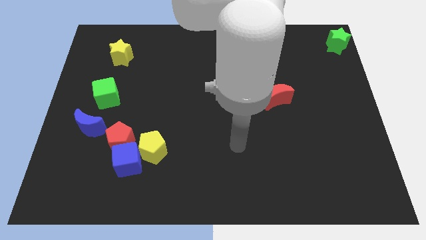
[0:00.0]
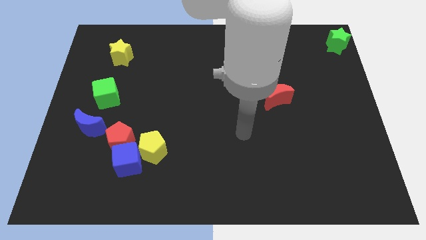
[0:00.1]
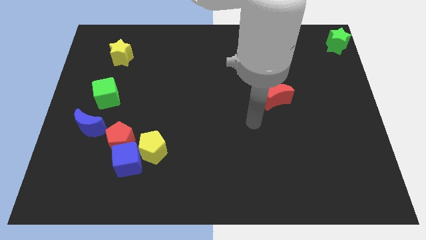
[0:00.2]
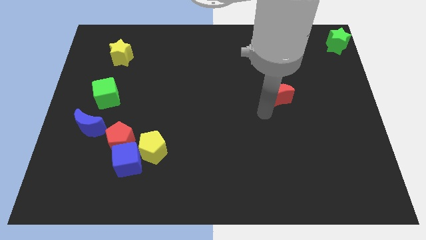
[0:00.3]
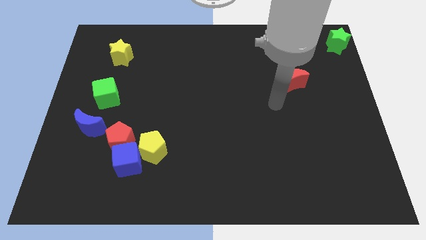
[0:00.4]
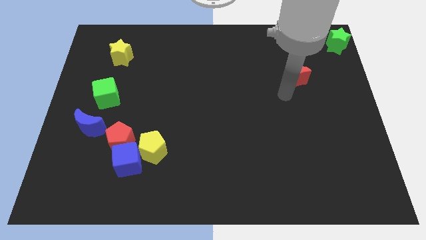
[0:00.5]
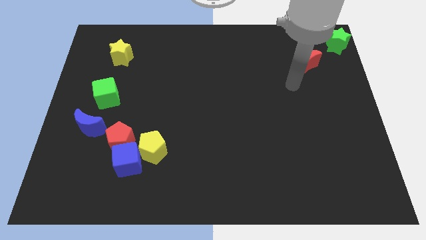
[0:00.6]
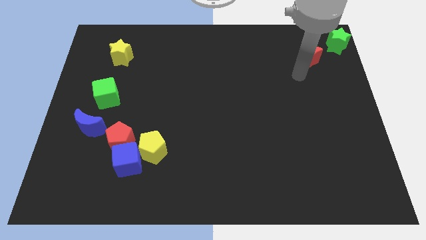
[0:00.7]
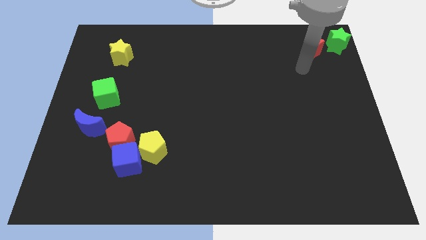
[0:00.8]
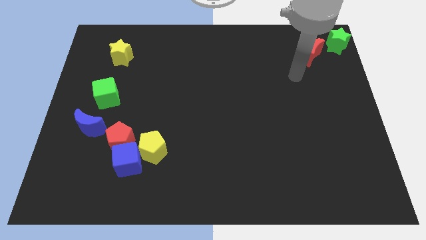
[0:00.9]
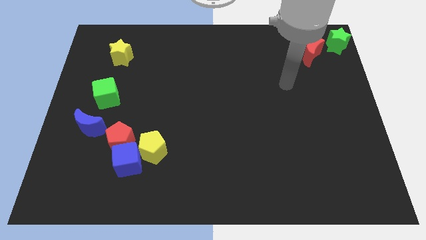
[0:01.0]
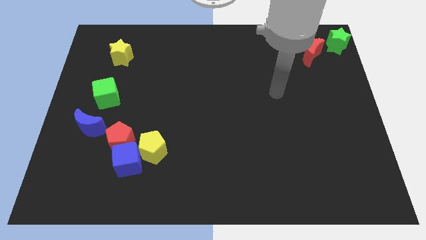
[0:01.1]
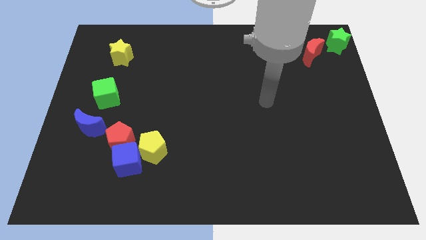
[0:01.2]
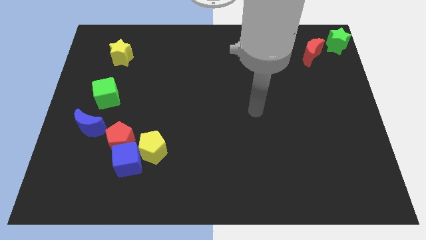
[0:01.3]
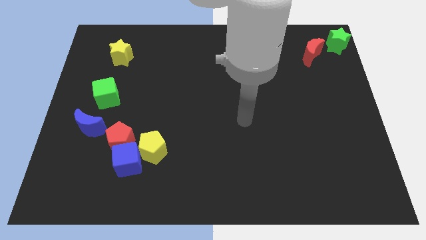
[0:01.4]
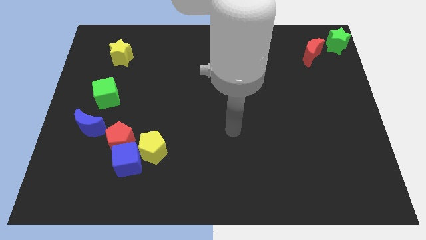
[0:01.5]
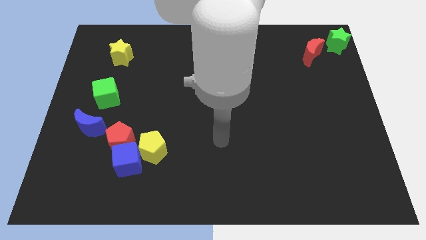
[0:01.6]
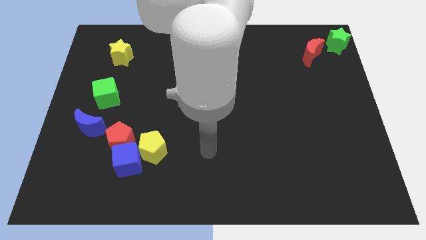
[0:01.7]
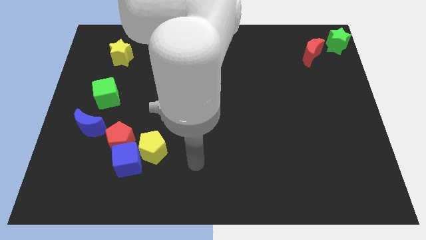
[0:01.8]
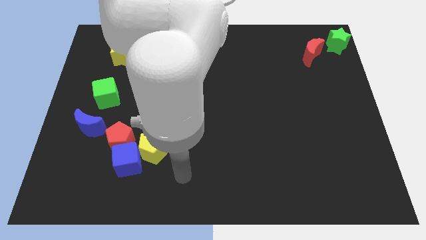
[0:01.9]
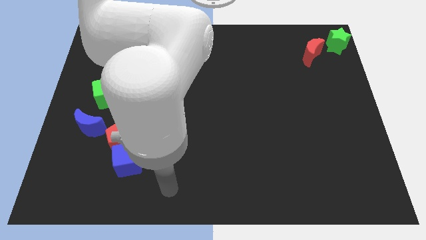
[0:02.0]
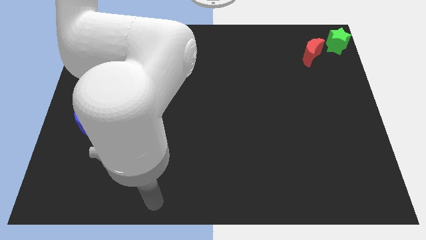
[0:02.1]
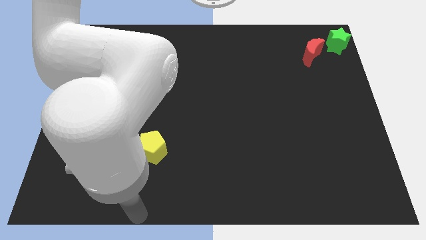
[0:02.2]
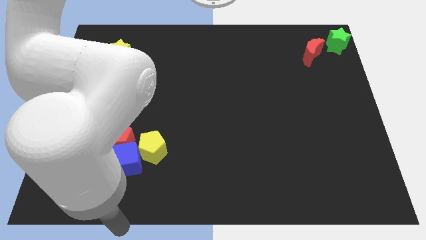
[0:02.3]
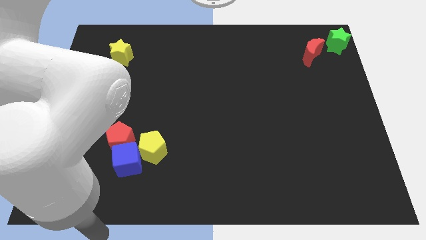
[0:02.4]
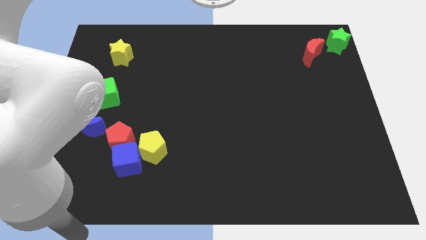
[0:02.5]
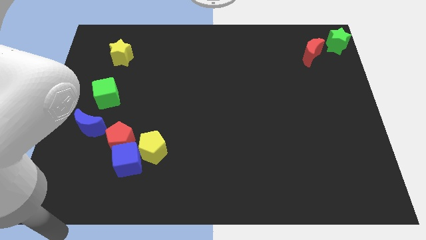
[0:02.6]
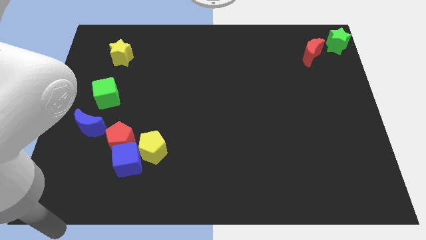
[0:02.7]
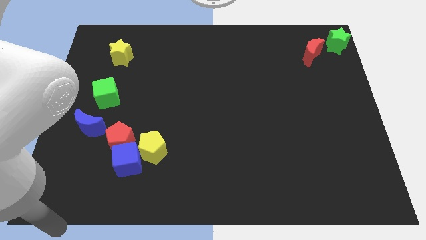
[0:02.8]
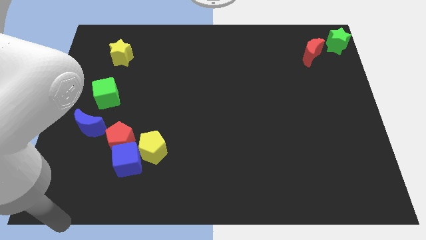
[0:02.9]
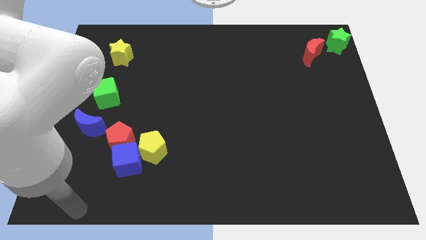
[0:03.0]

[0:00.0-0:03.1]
move the red crescent close to the green star and go away

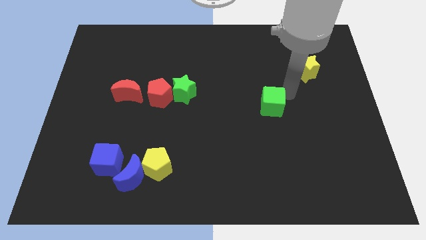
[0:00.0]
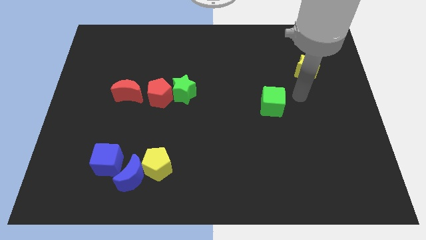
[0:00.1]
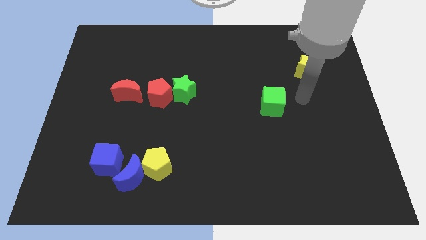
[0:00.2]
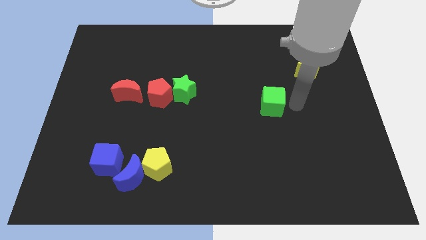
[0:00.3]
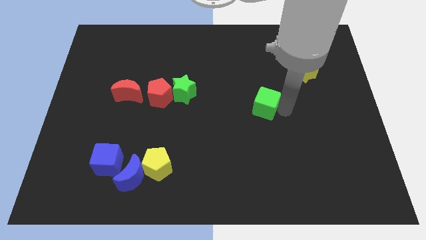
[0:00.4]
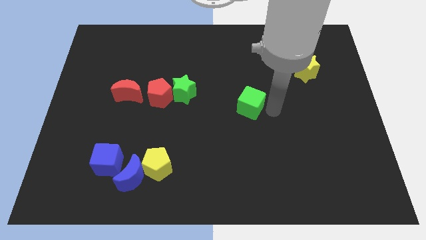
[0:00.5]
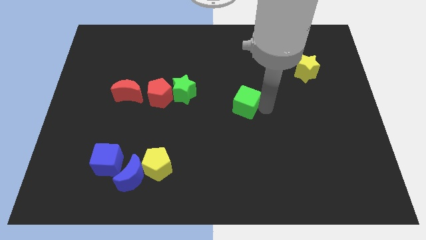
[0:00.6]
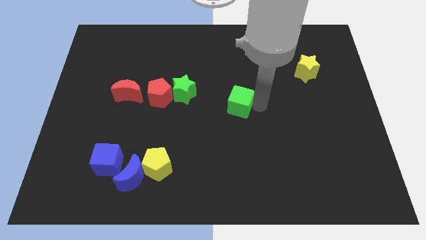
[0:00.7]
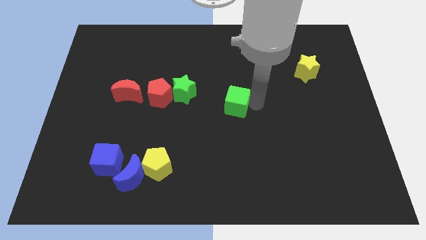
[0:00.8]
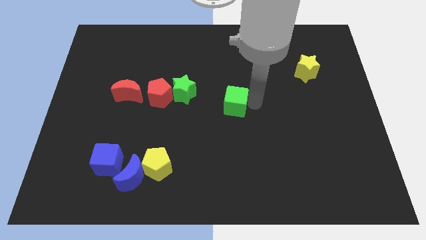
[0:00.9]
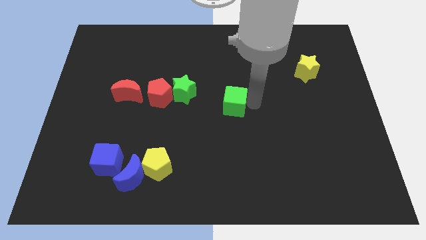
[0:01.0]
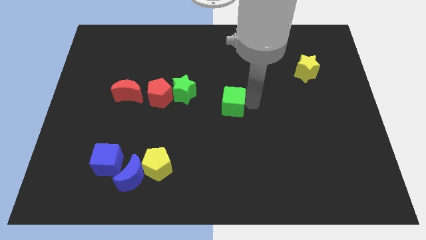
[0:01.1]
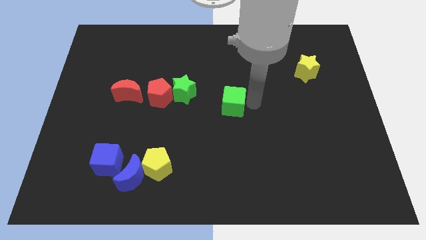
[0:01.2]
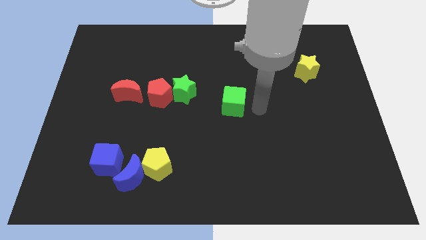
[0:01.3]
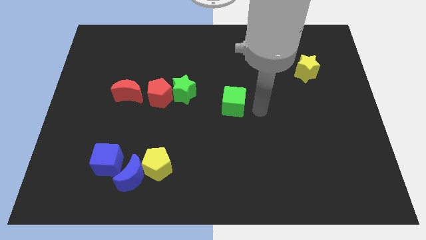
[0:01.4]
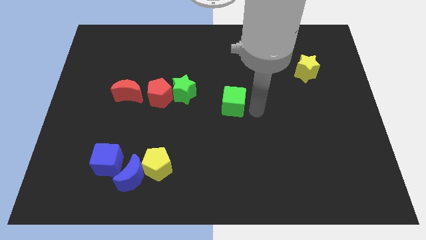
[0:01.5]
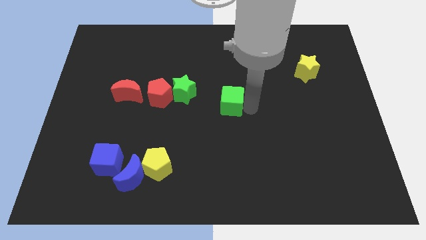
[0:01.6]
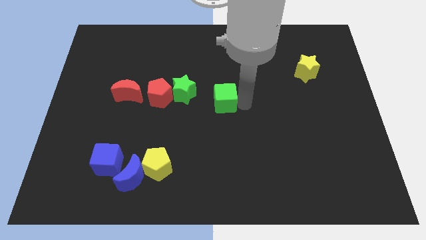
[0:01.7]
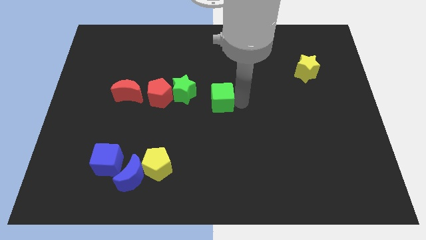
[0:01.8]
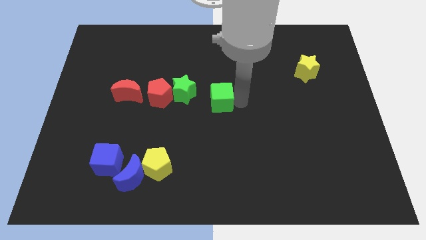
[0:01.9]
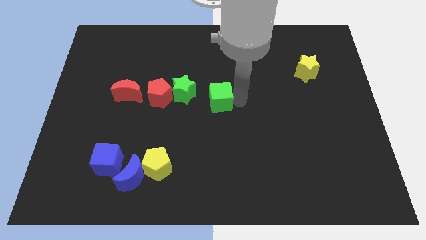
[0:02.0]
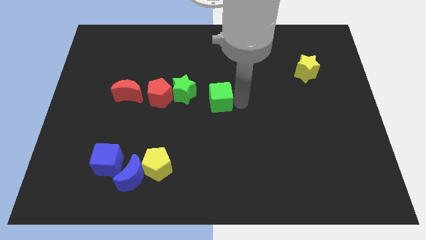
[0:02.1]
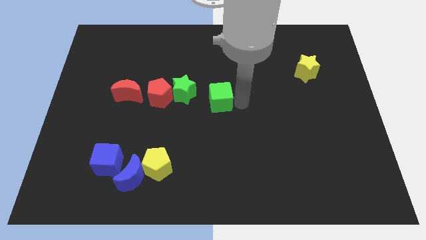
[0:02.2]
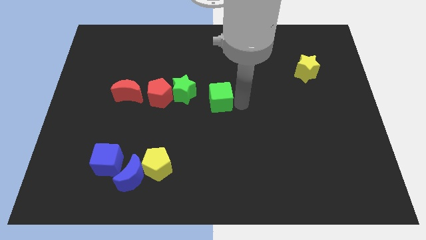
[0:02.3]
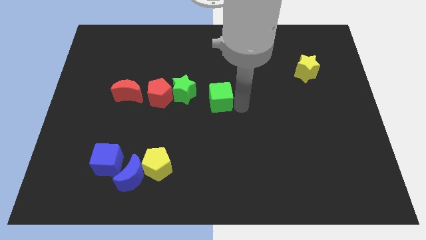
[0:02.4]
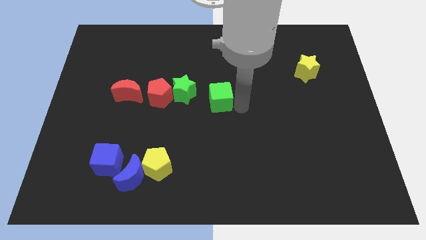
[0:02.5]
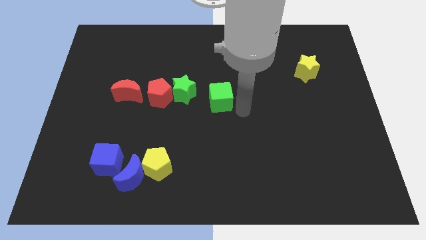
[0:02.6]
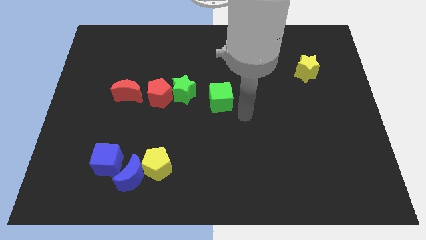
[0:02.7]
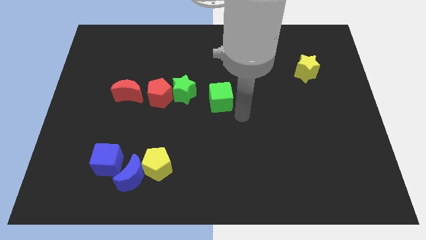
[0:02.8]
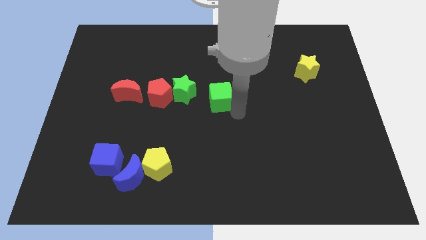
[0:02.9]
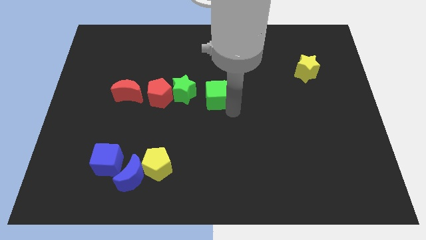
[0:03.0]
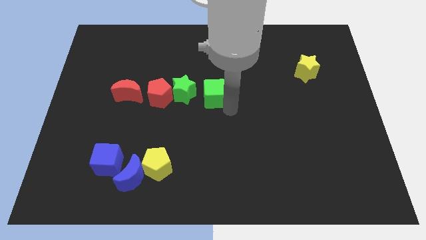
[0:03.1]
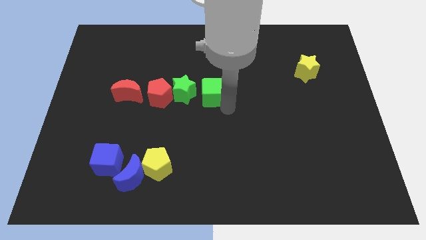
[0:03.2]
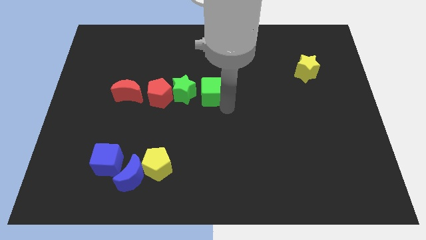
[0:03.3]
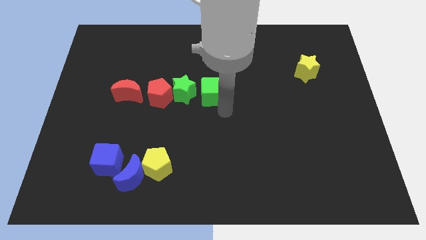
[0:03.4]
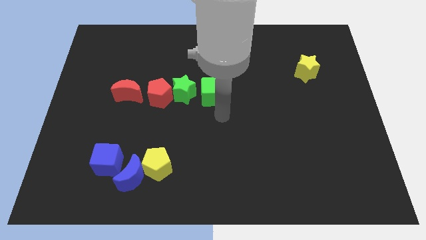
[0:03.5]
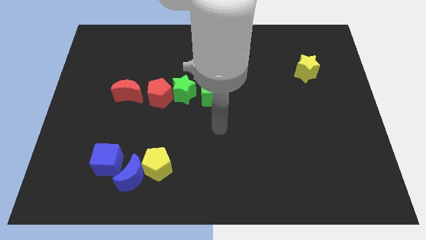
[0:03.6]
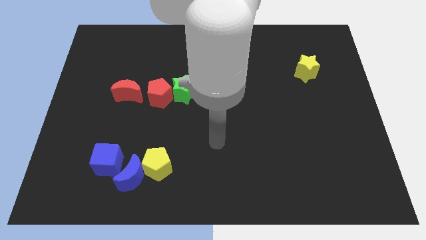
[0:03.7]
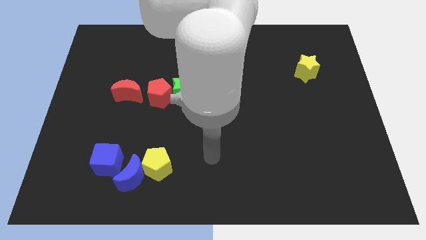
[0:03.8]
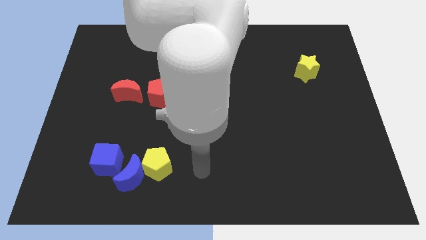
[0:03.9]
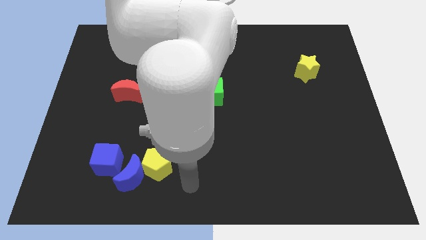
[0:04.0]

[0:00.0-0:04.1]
push green cube into green star

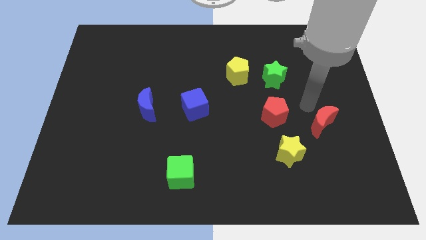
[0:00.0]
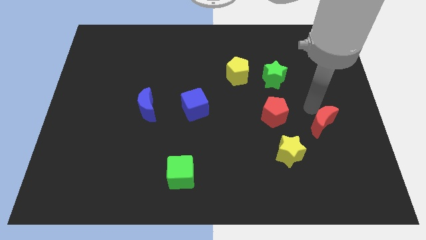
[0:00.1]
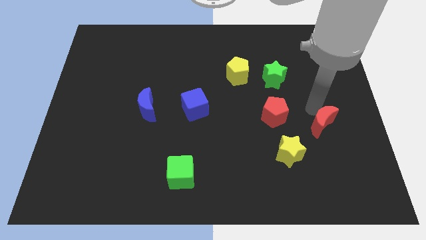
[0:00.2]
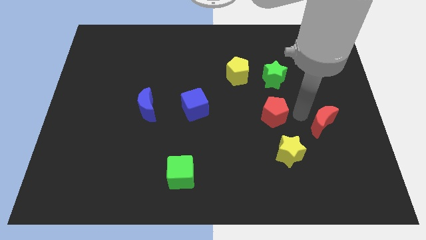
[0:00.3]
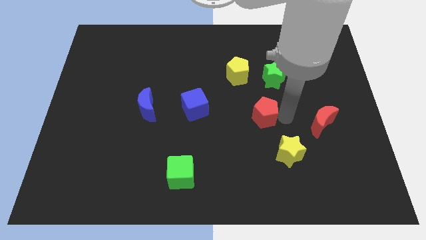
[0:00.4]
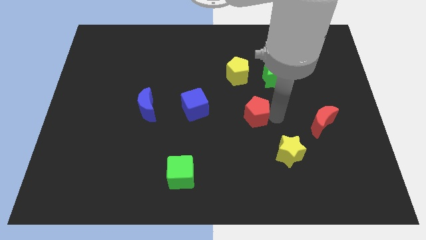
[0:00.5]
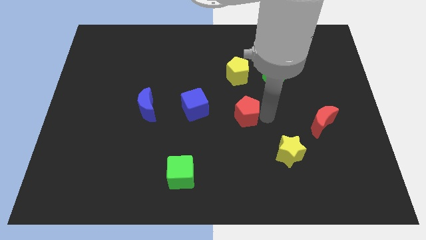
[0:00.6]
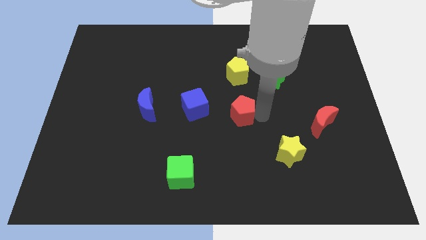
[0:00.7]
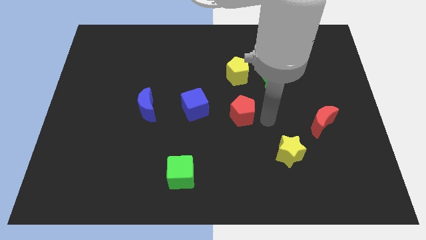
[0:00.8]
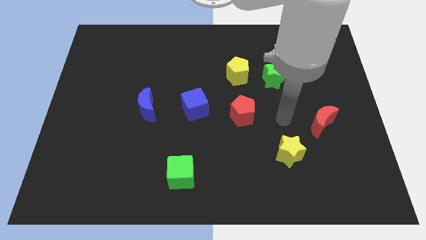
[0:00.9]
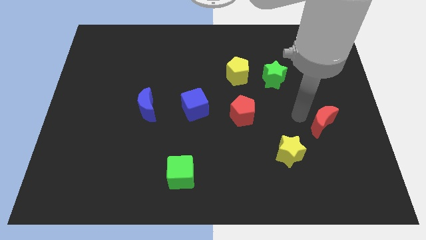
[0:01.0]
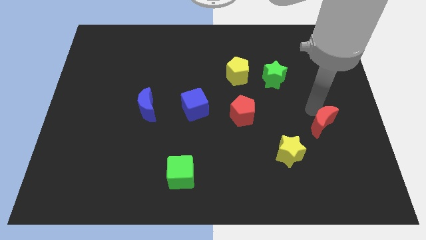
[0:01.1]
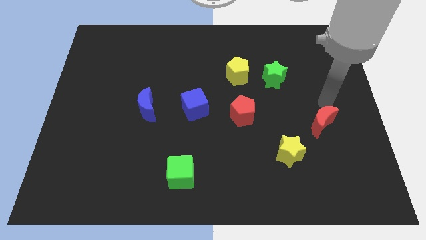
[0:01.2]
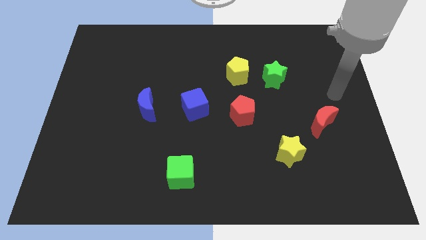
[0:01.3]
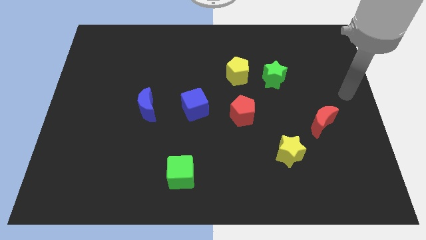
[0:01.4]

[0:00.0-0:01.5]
move the red pentagon below the yellow pentagon

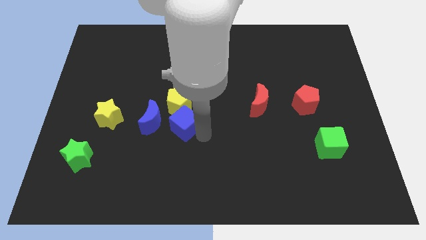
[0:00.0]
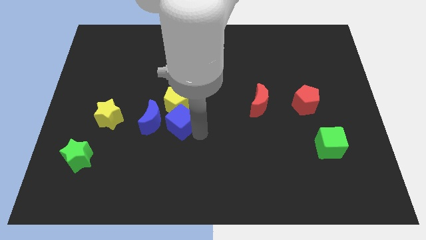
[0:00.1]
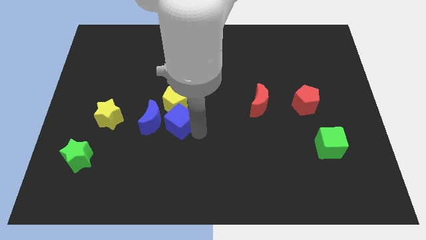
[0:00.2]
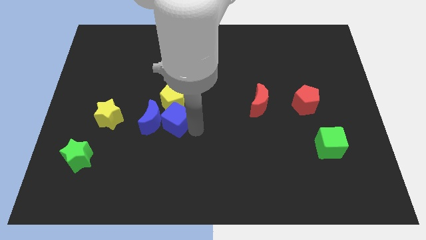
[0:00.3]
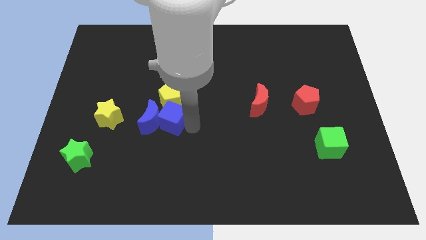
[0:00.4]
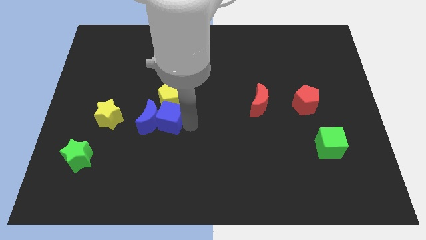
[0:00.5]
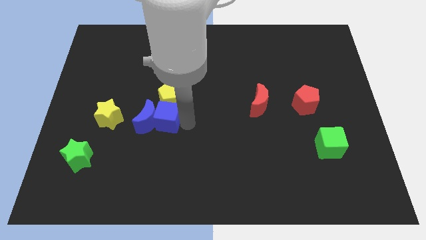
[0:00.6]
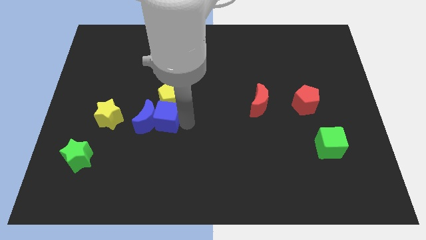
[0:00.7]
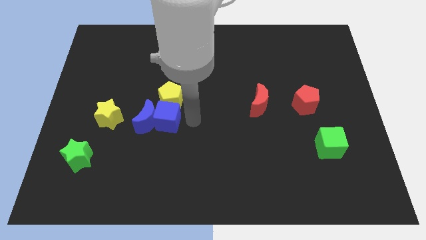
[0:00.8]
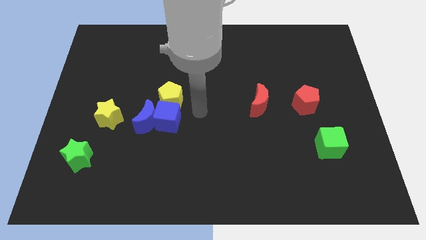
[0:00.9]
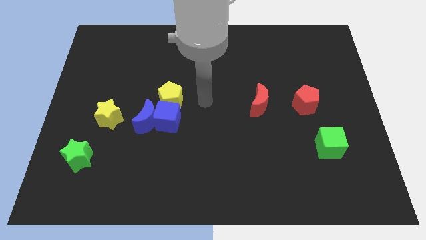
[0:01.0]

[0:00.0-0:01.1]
move the blue cube to the right of the blue crescent
